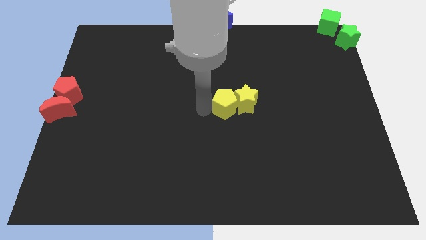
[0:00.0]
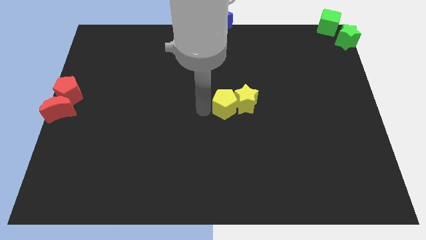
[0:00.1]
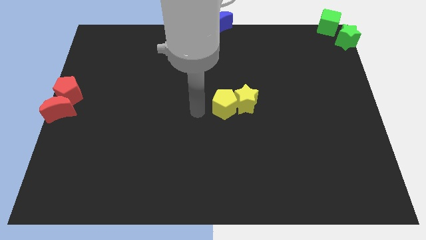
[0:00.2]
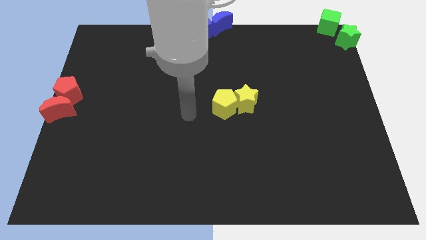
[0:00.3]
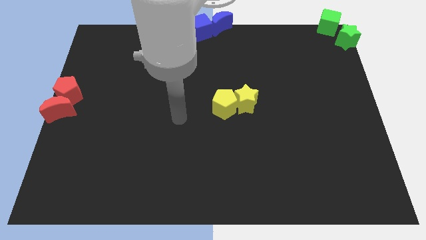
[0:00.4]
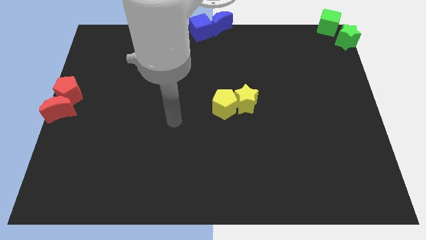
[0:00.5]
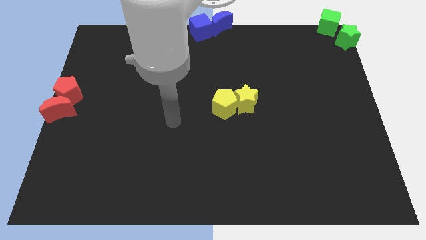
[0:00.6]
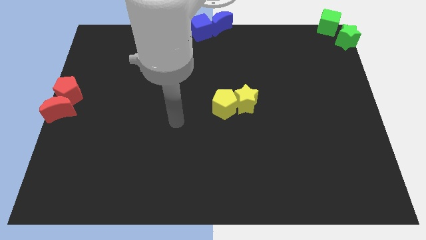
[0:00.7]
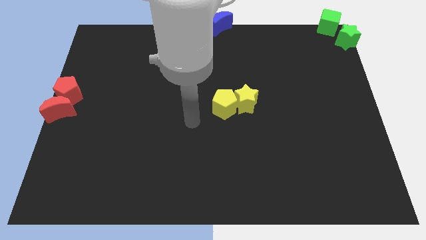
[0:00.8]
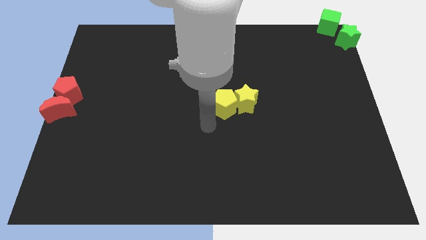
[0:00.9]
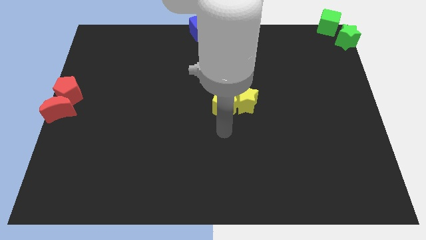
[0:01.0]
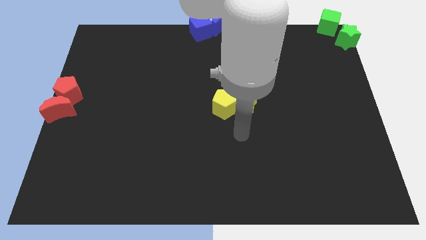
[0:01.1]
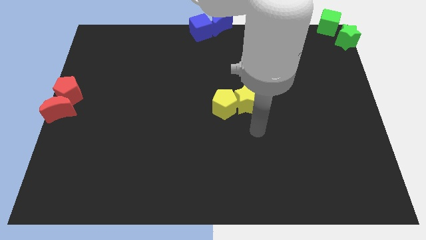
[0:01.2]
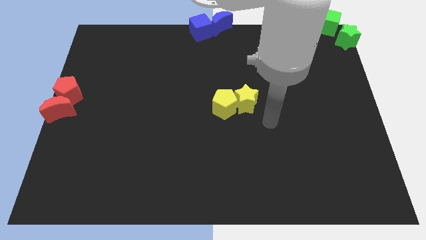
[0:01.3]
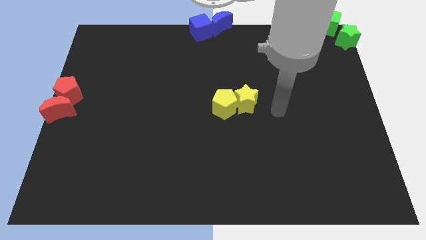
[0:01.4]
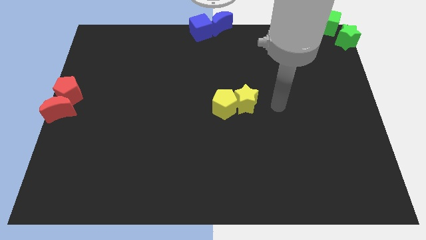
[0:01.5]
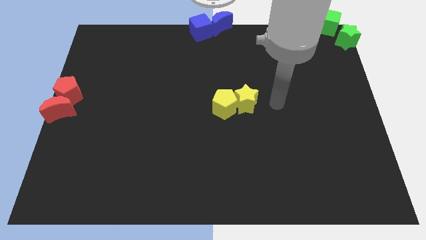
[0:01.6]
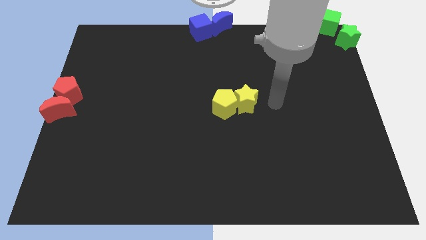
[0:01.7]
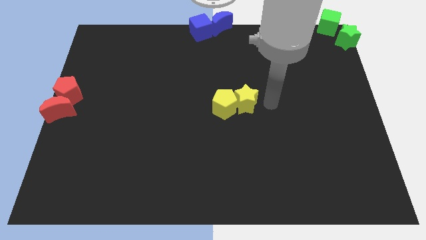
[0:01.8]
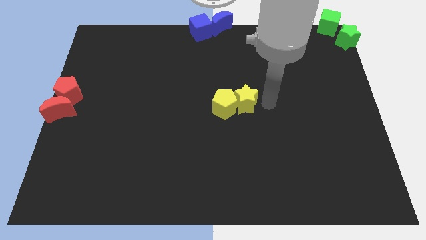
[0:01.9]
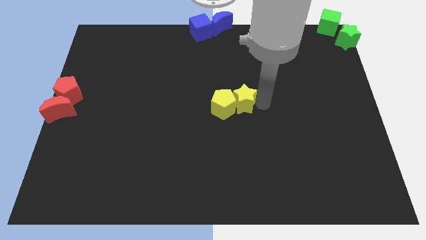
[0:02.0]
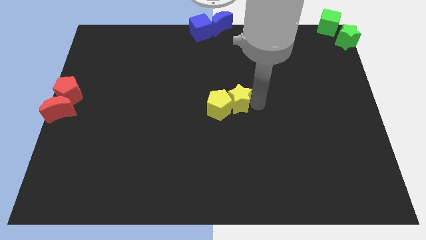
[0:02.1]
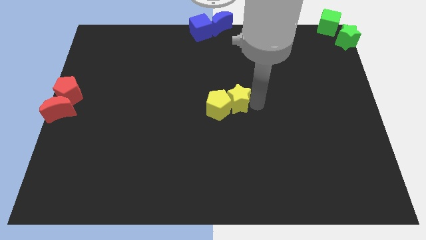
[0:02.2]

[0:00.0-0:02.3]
go and touch the right side of the yellow star

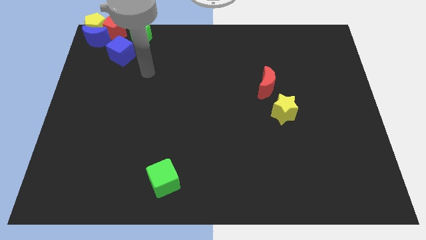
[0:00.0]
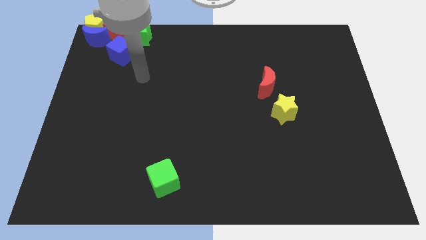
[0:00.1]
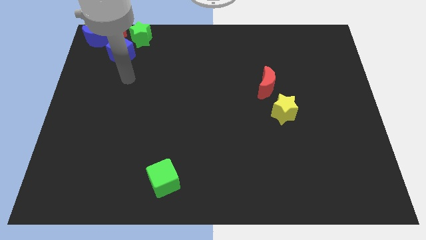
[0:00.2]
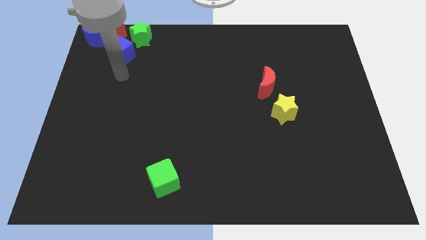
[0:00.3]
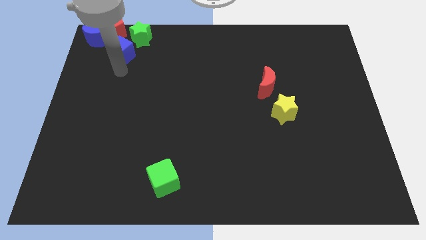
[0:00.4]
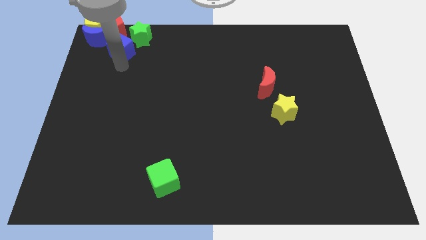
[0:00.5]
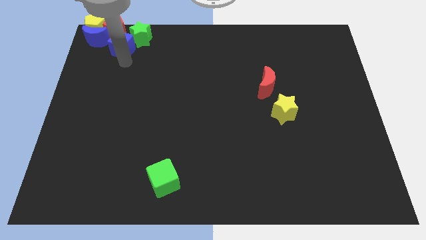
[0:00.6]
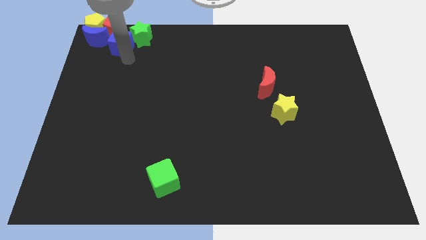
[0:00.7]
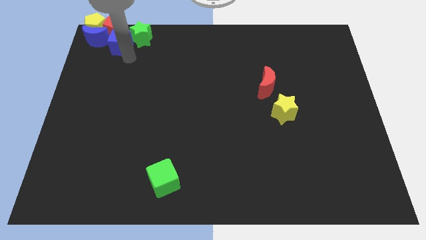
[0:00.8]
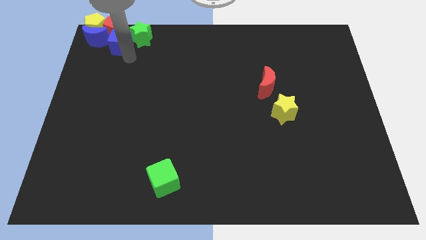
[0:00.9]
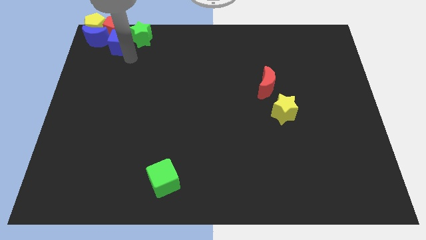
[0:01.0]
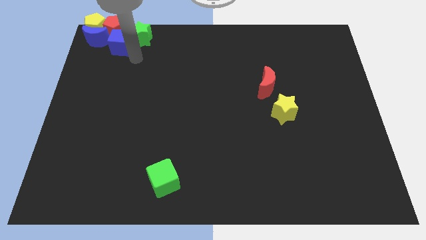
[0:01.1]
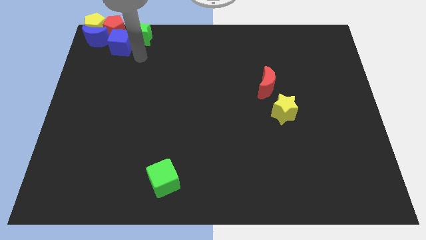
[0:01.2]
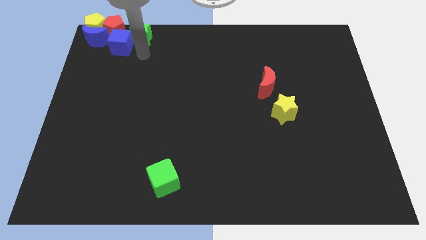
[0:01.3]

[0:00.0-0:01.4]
move the blue cube down to the red pentagon

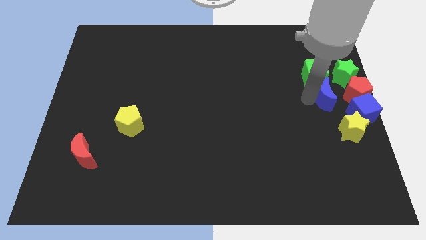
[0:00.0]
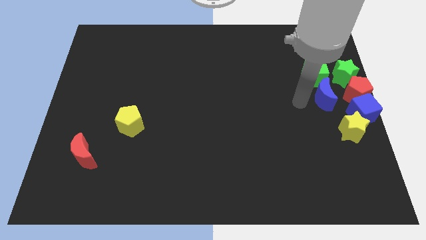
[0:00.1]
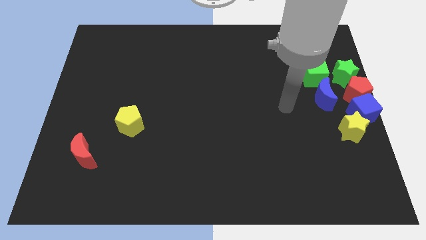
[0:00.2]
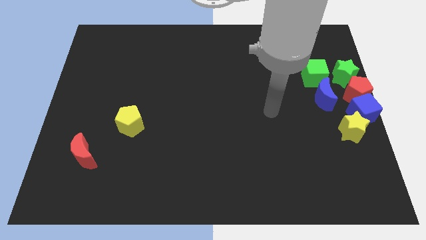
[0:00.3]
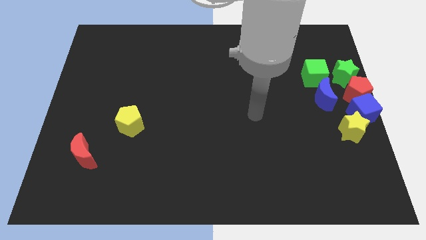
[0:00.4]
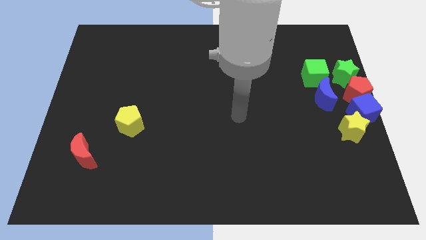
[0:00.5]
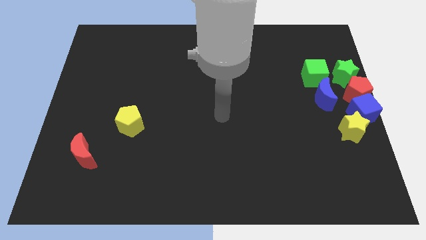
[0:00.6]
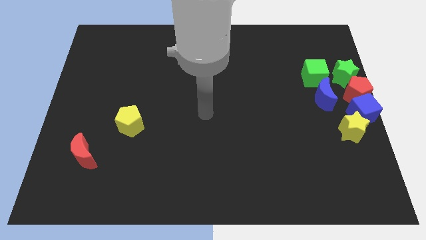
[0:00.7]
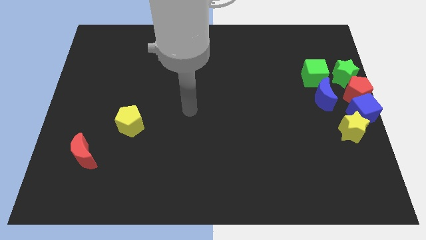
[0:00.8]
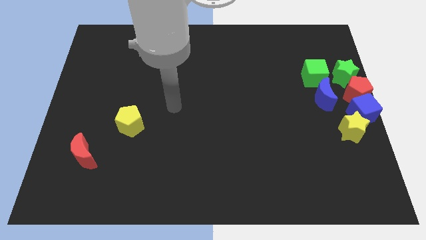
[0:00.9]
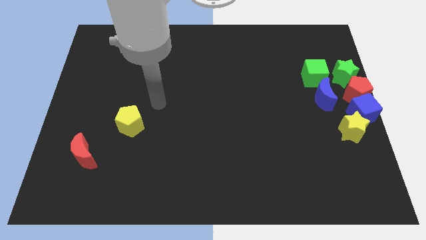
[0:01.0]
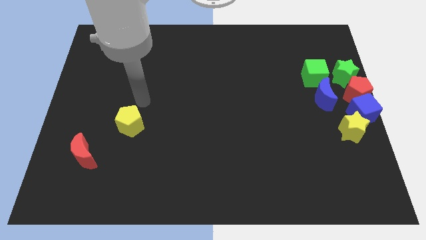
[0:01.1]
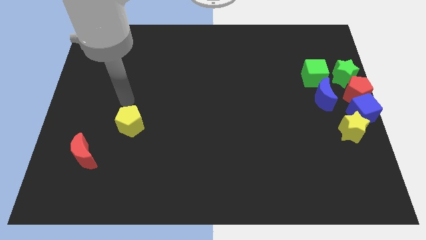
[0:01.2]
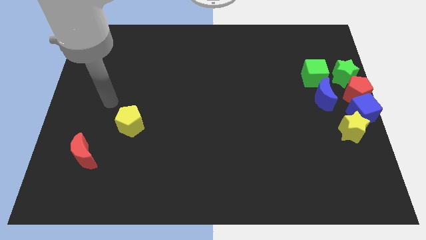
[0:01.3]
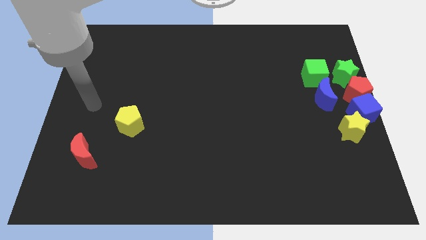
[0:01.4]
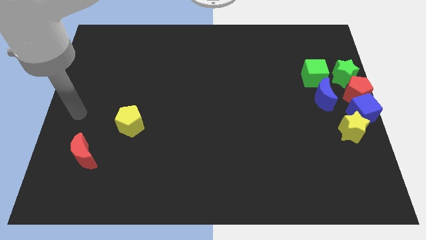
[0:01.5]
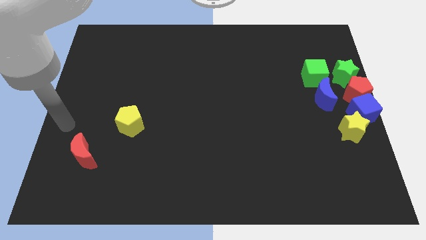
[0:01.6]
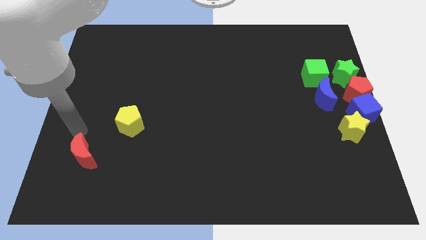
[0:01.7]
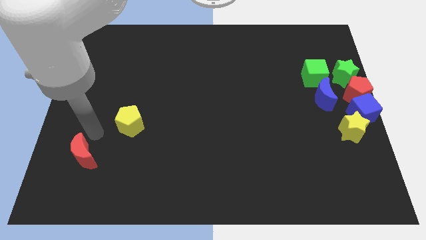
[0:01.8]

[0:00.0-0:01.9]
move your arm in between the yellow pentagon and red moon

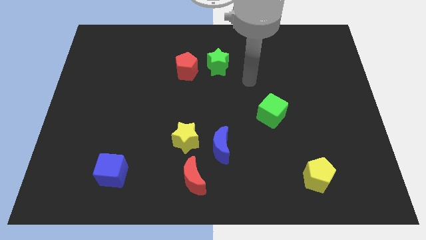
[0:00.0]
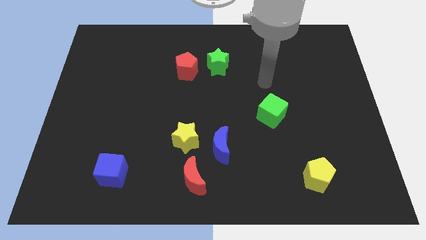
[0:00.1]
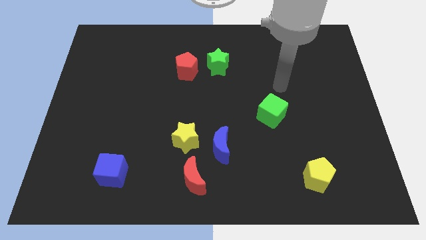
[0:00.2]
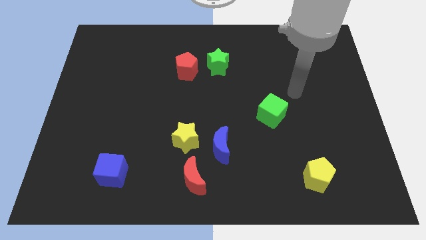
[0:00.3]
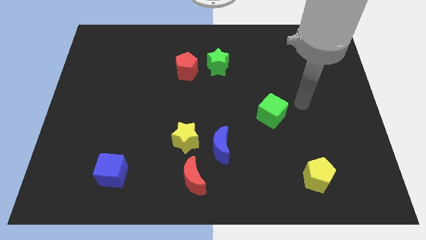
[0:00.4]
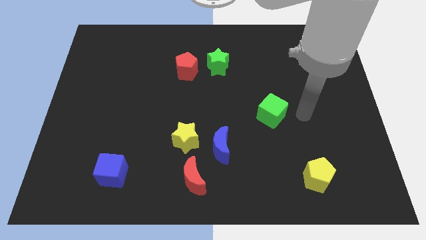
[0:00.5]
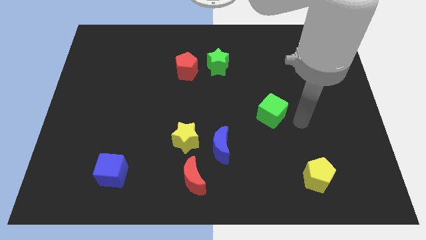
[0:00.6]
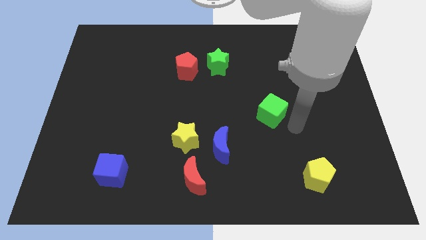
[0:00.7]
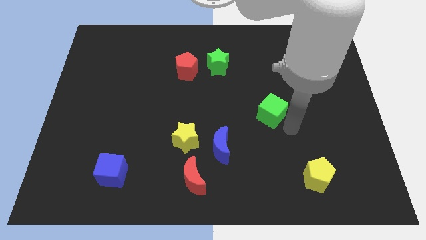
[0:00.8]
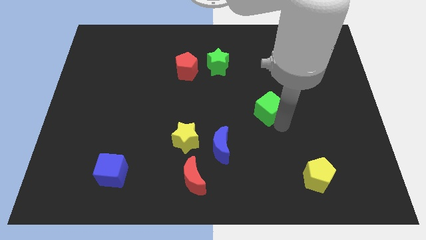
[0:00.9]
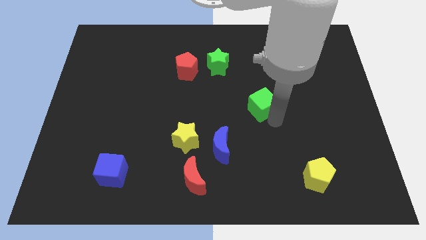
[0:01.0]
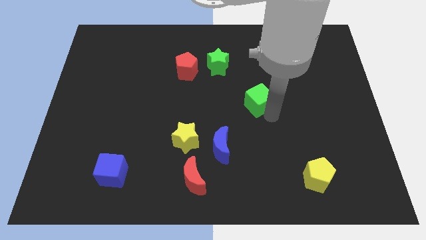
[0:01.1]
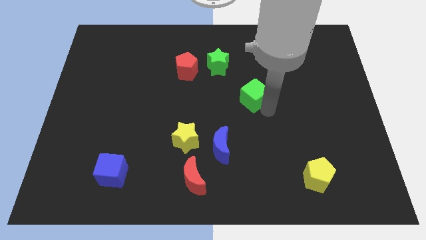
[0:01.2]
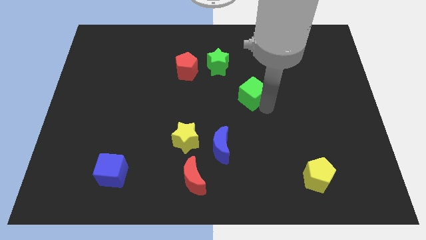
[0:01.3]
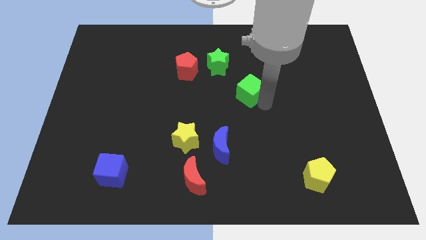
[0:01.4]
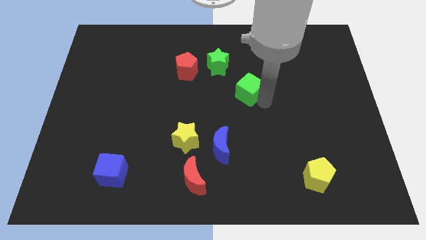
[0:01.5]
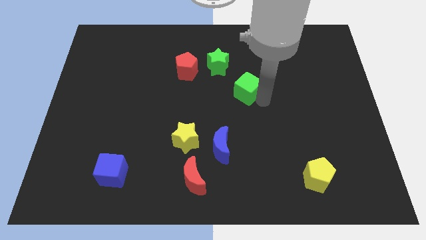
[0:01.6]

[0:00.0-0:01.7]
slide the green cube towards the bottm right of the green star

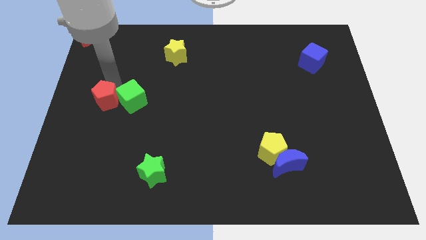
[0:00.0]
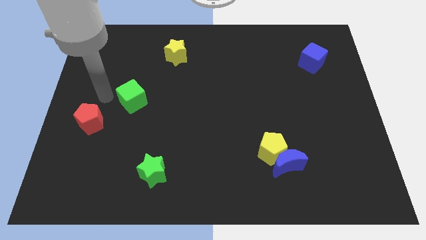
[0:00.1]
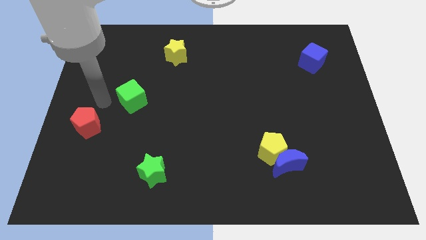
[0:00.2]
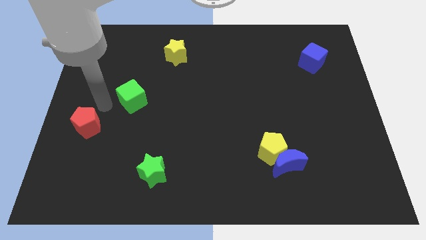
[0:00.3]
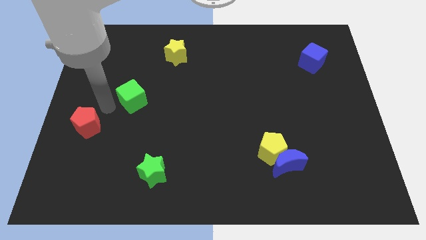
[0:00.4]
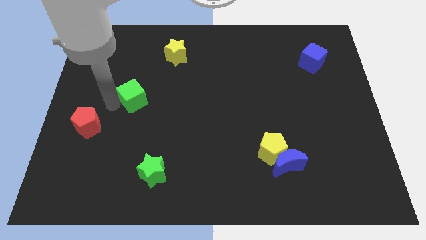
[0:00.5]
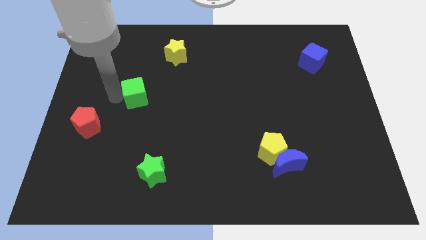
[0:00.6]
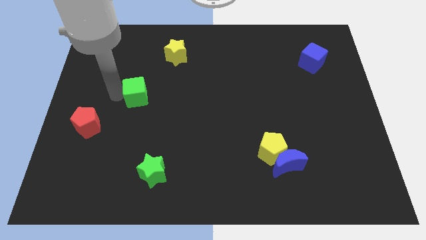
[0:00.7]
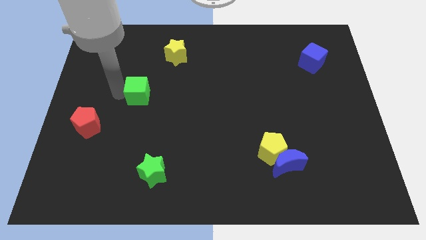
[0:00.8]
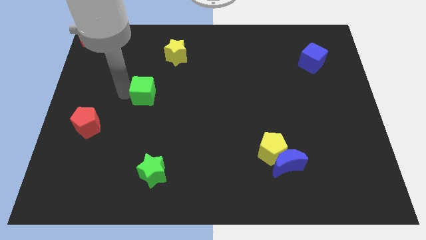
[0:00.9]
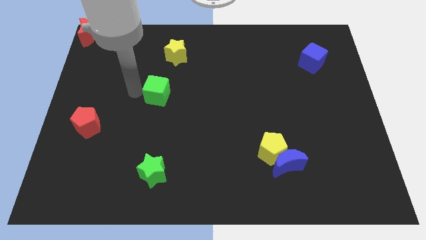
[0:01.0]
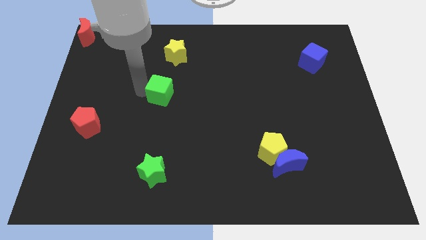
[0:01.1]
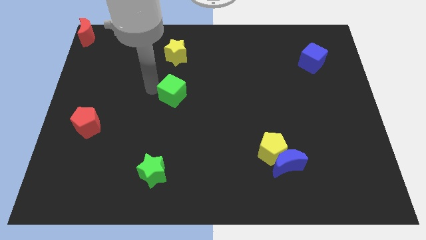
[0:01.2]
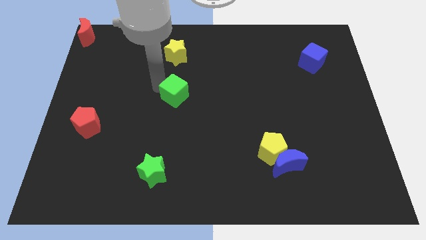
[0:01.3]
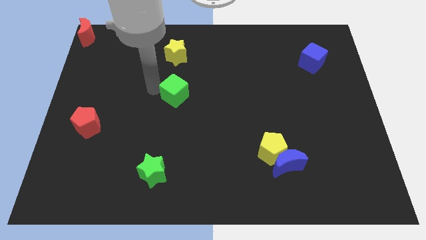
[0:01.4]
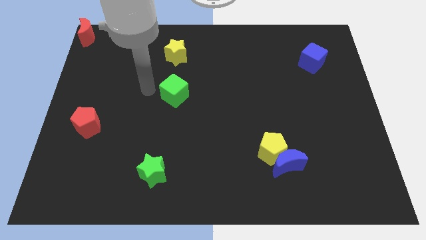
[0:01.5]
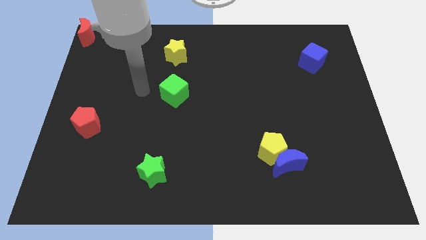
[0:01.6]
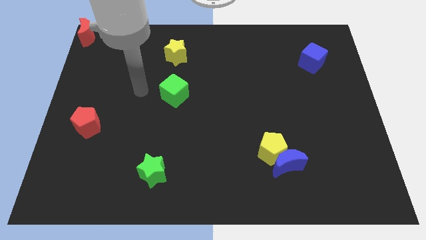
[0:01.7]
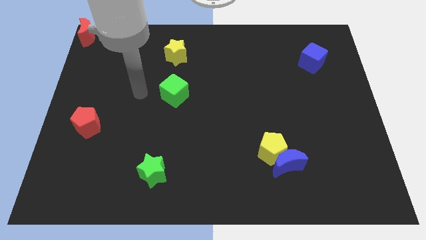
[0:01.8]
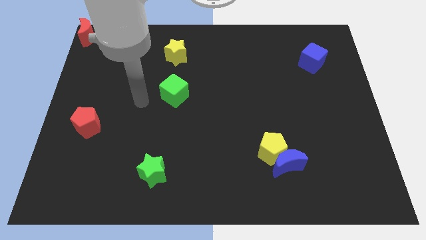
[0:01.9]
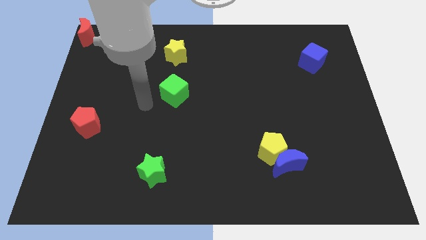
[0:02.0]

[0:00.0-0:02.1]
push green cube below yellow star
